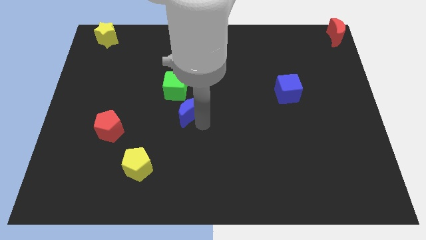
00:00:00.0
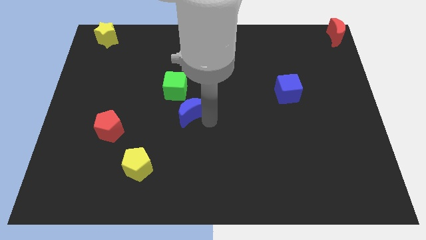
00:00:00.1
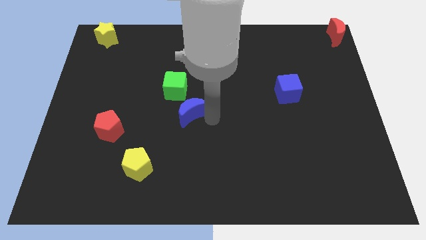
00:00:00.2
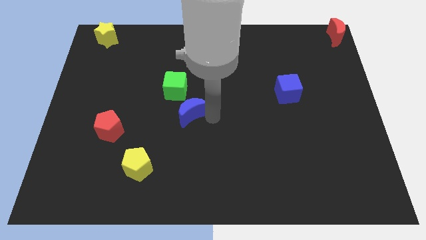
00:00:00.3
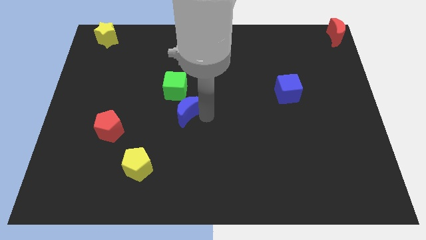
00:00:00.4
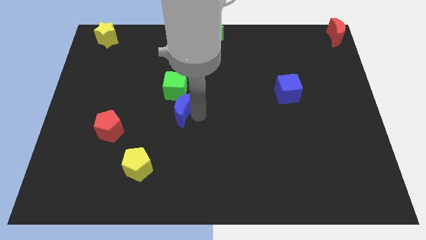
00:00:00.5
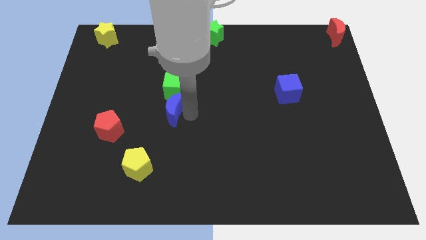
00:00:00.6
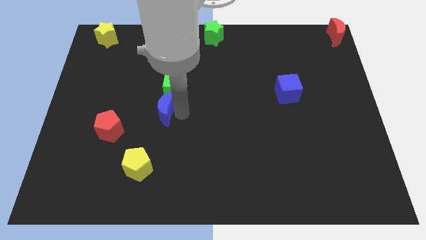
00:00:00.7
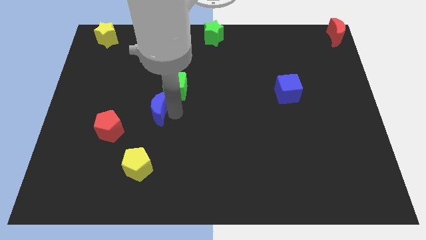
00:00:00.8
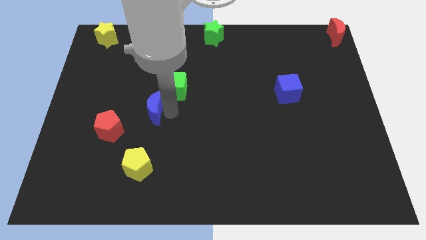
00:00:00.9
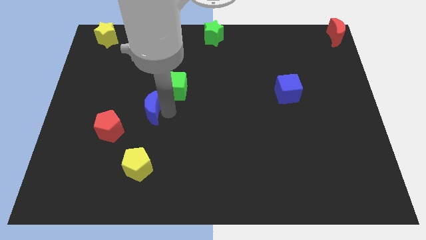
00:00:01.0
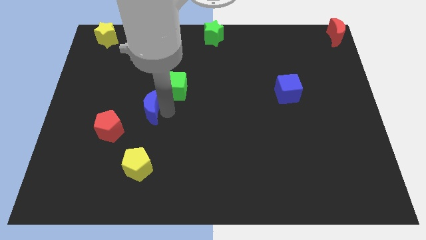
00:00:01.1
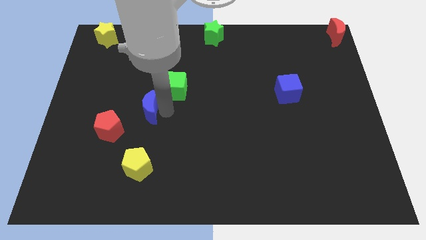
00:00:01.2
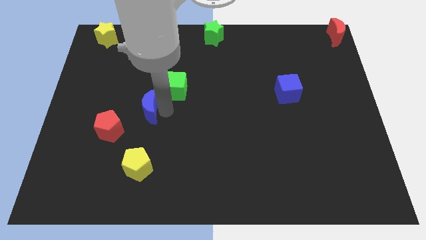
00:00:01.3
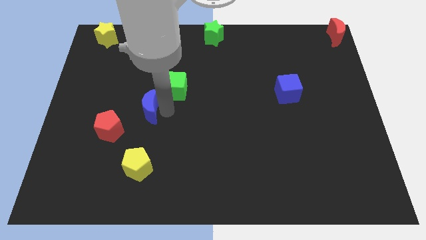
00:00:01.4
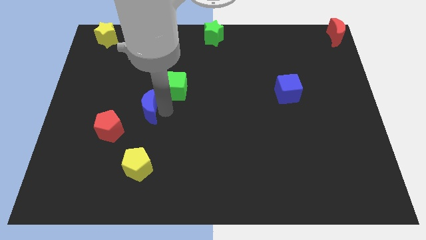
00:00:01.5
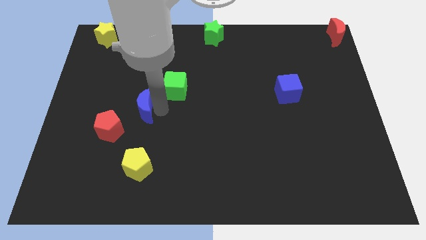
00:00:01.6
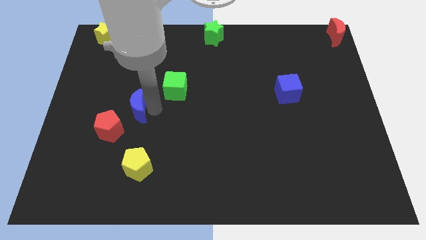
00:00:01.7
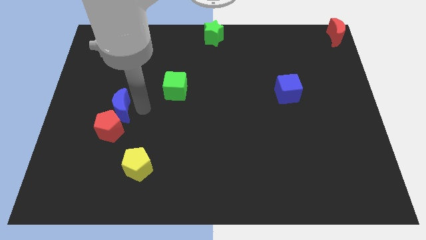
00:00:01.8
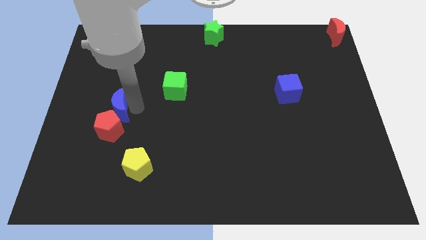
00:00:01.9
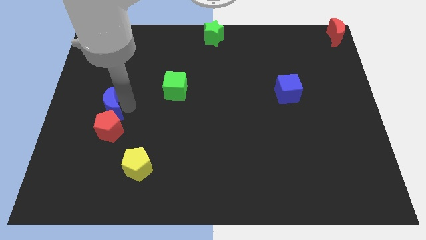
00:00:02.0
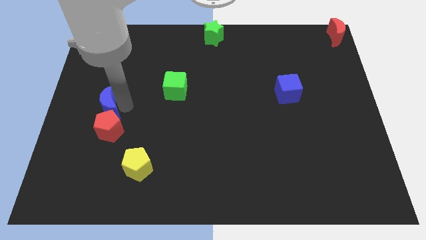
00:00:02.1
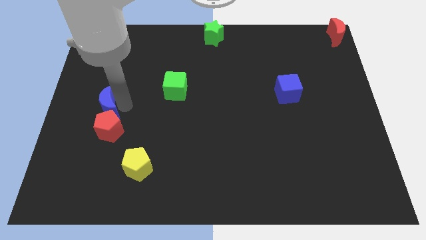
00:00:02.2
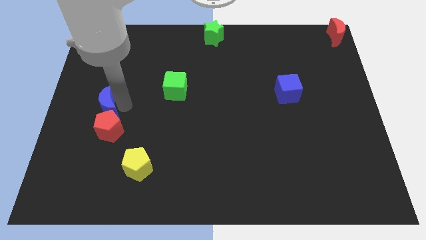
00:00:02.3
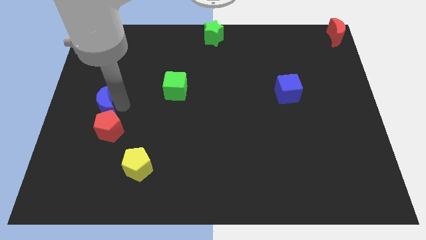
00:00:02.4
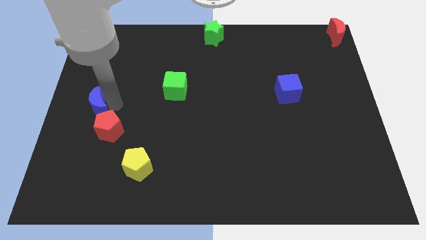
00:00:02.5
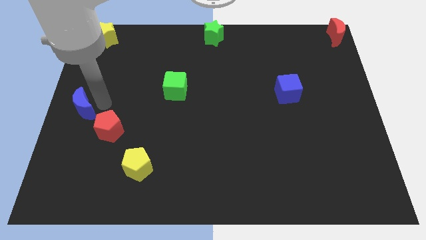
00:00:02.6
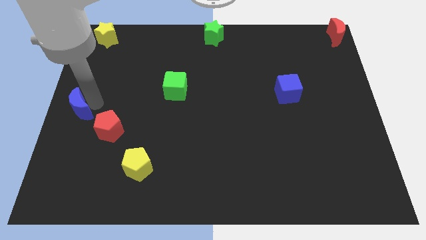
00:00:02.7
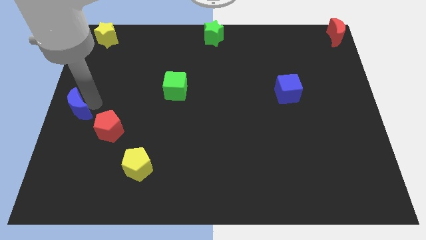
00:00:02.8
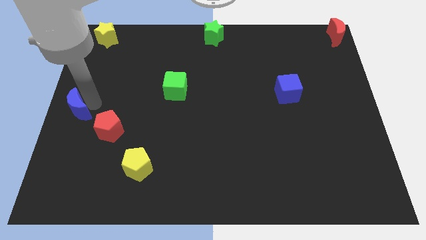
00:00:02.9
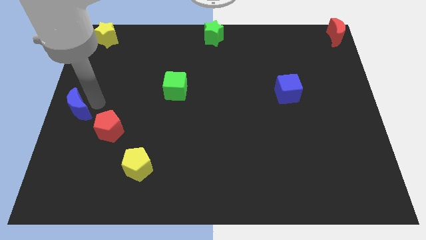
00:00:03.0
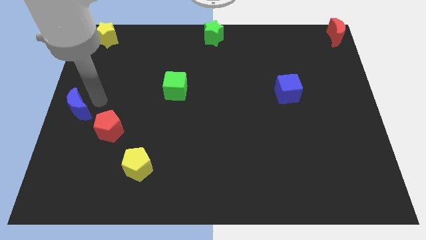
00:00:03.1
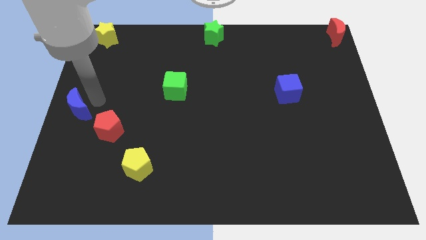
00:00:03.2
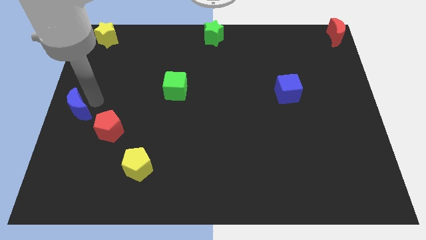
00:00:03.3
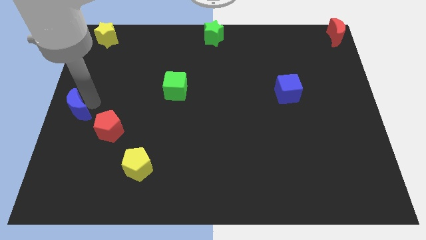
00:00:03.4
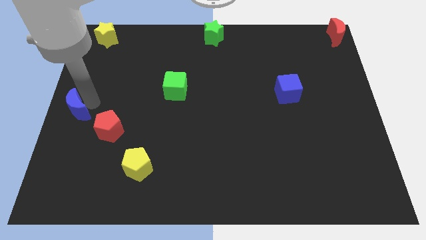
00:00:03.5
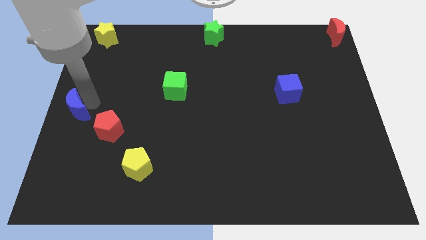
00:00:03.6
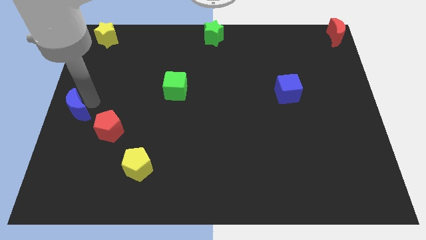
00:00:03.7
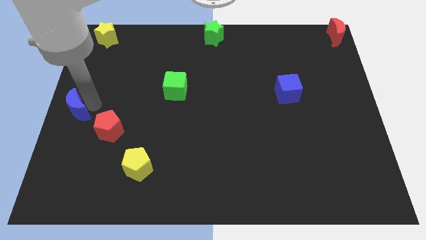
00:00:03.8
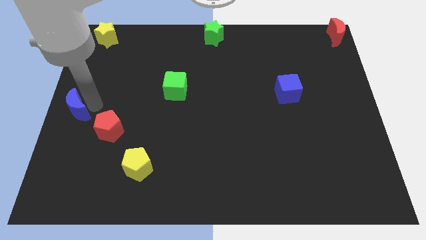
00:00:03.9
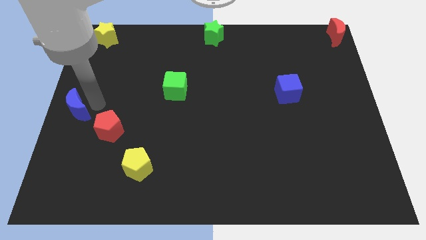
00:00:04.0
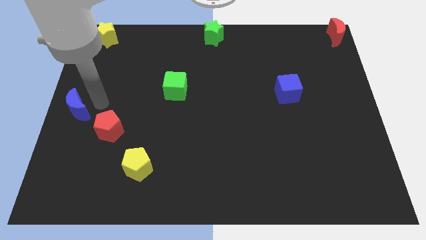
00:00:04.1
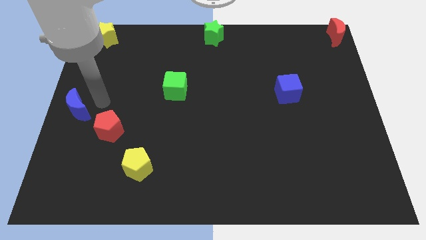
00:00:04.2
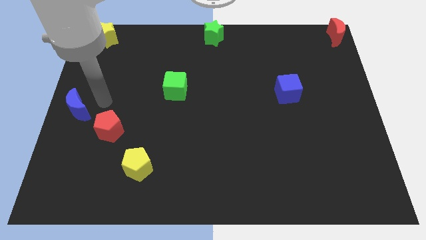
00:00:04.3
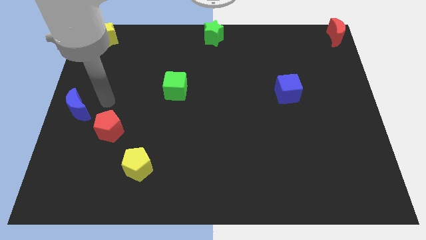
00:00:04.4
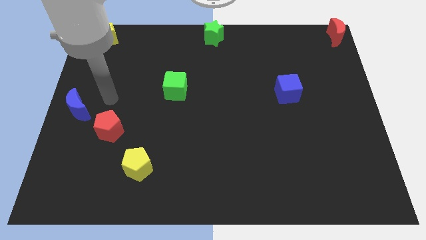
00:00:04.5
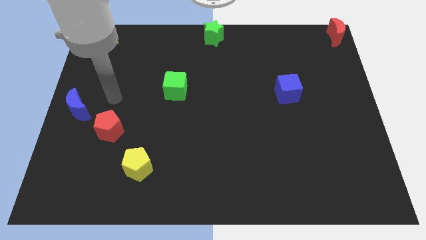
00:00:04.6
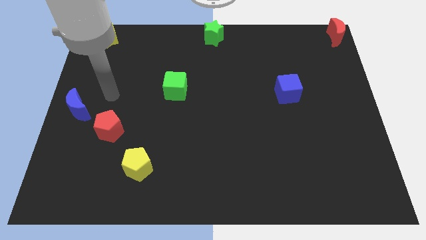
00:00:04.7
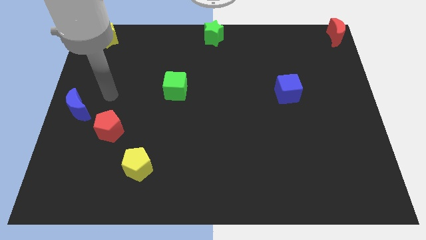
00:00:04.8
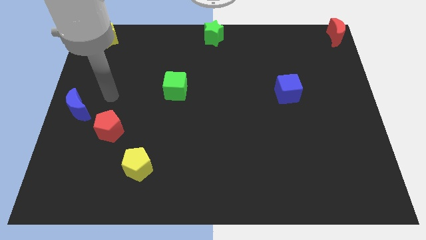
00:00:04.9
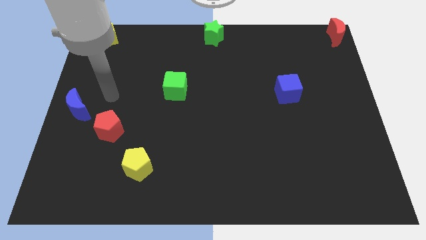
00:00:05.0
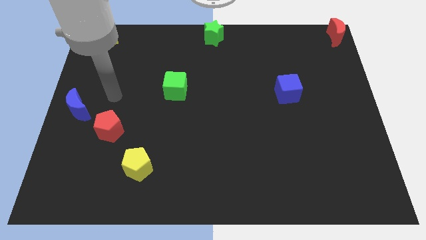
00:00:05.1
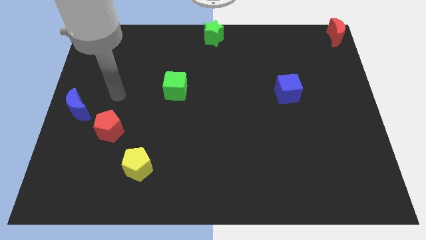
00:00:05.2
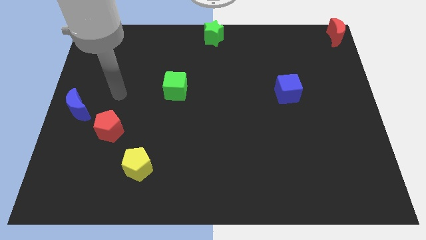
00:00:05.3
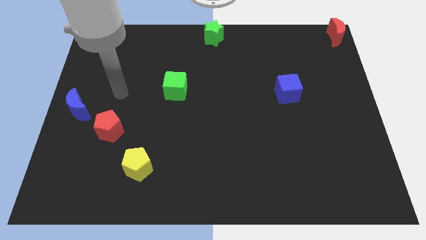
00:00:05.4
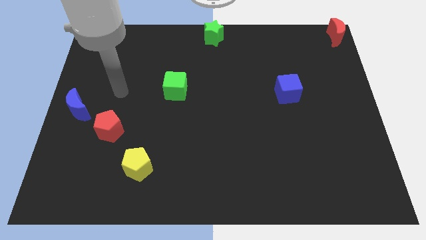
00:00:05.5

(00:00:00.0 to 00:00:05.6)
move the blue crescent towards left center of the board

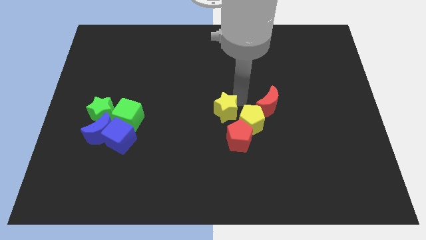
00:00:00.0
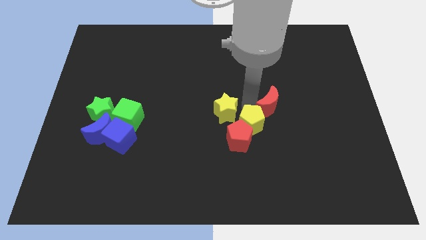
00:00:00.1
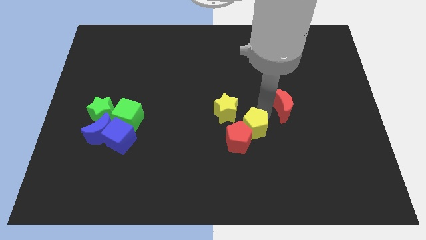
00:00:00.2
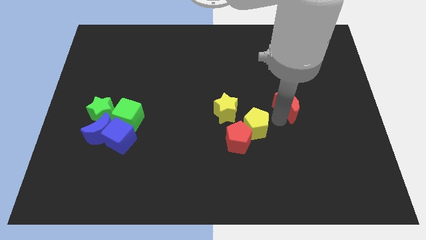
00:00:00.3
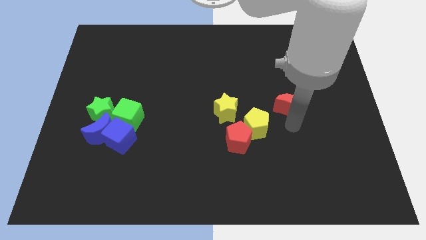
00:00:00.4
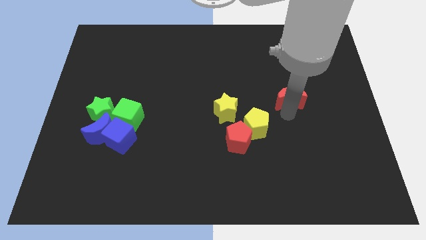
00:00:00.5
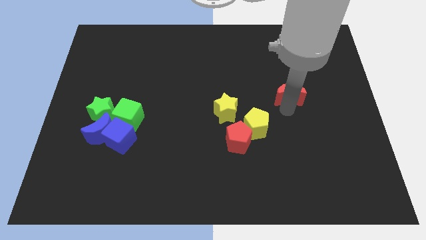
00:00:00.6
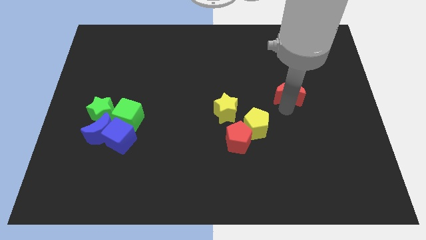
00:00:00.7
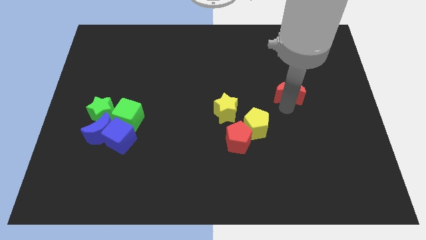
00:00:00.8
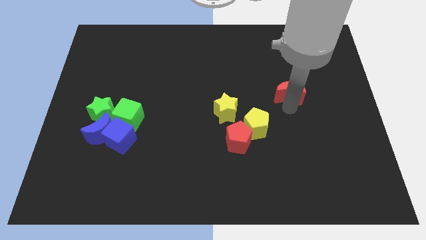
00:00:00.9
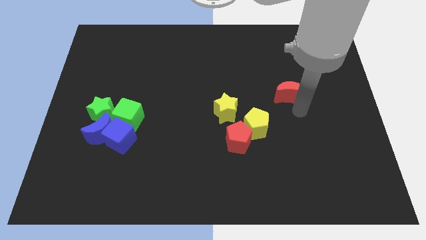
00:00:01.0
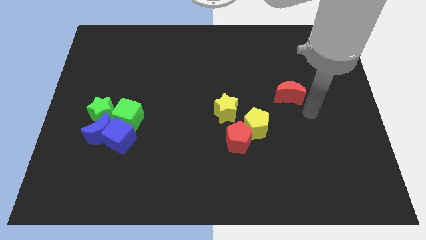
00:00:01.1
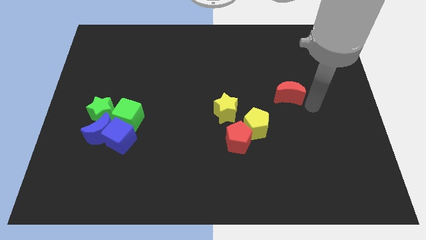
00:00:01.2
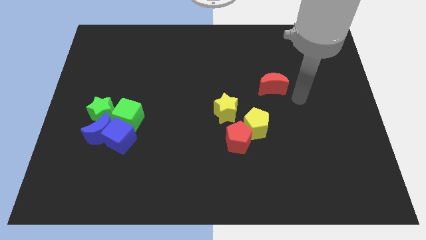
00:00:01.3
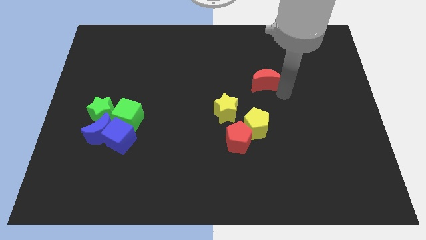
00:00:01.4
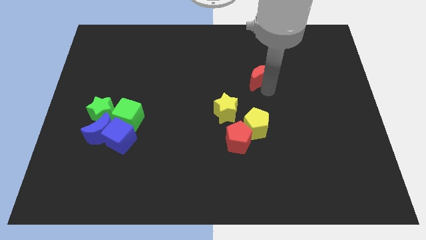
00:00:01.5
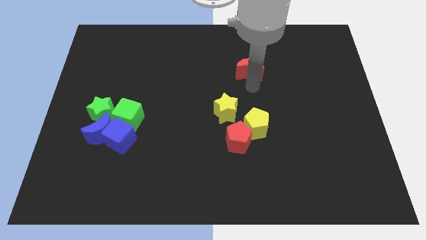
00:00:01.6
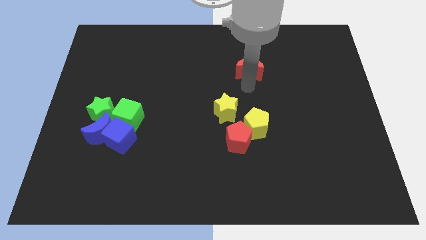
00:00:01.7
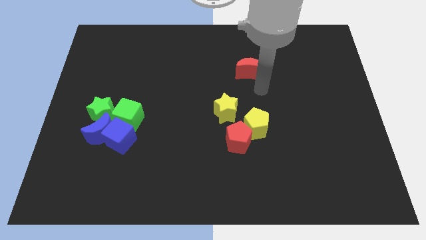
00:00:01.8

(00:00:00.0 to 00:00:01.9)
push the red moon away from the yellow pentagon

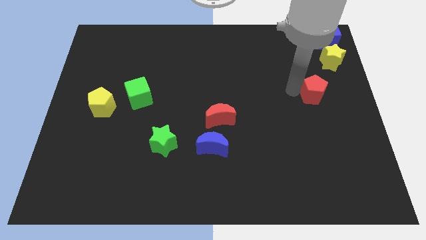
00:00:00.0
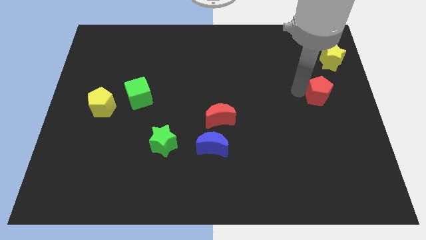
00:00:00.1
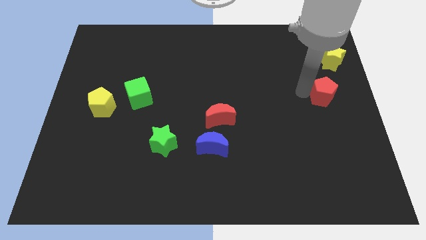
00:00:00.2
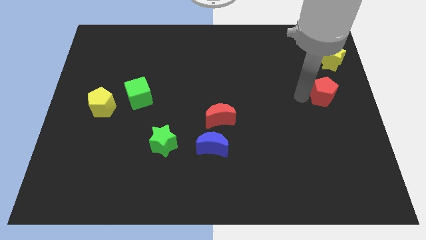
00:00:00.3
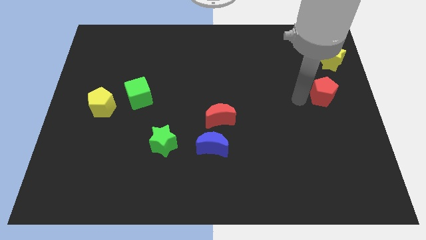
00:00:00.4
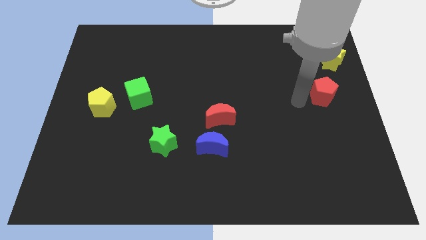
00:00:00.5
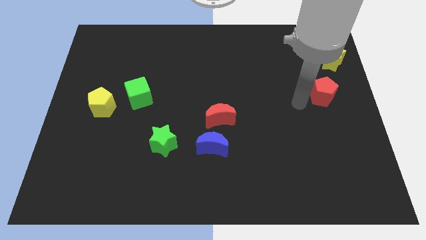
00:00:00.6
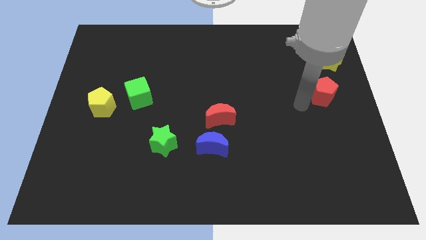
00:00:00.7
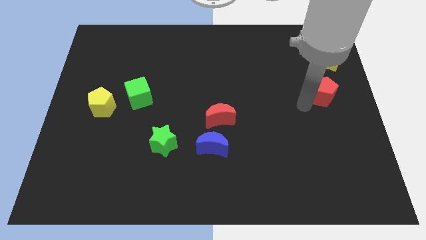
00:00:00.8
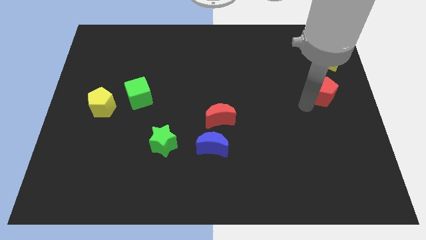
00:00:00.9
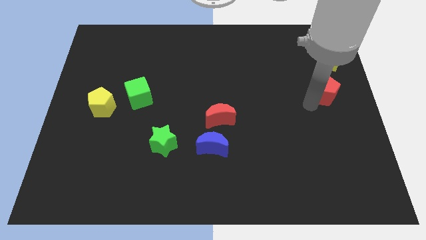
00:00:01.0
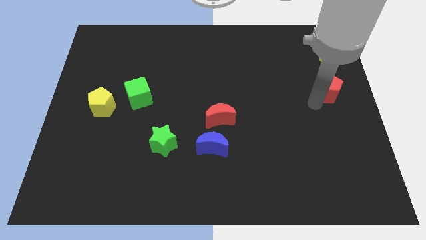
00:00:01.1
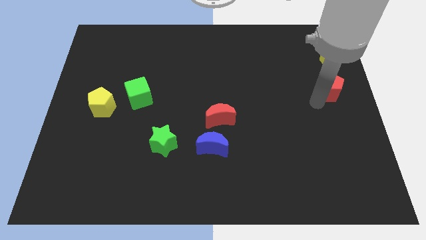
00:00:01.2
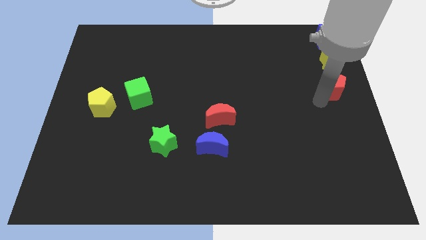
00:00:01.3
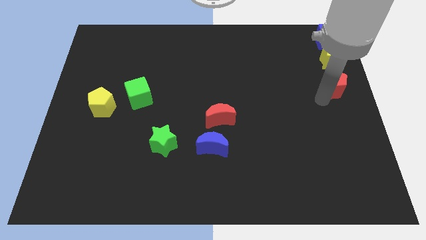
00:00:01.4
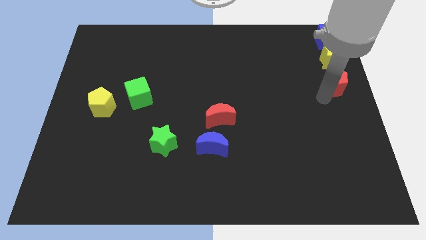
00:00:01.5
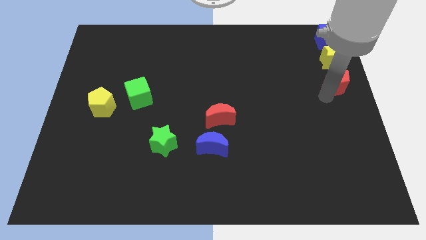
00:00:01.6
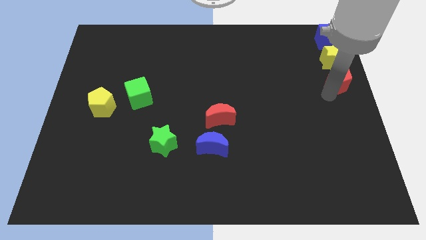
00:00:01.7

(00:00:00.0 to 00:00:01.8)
move the red pentagon to the bottom of the yellow star
